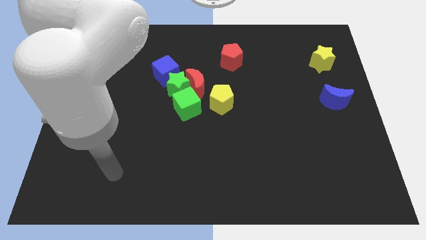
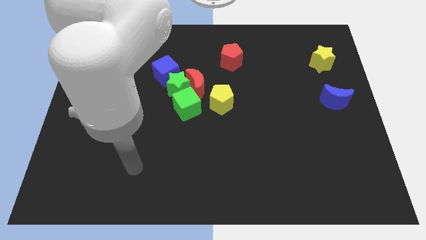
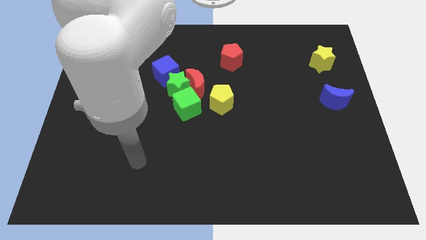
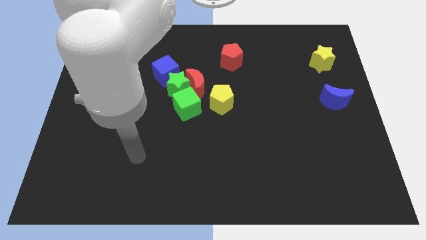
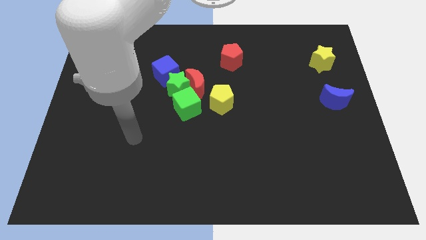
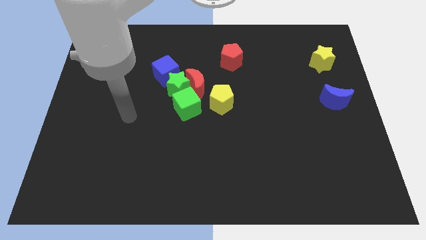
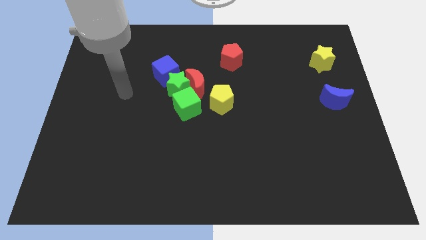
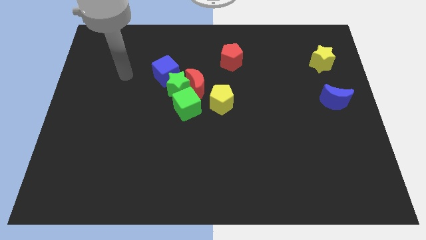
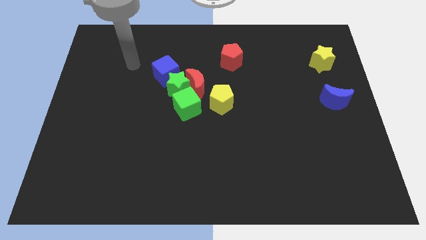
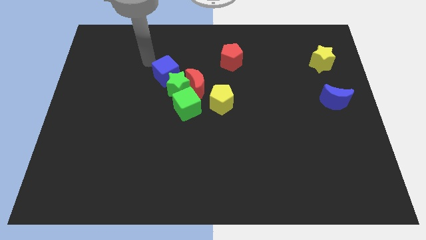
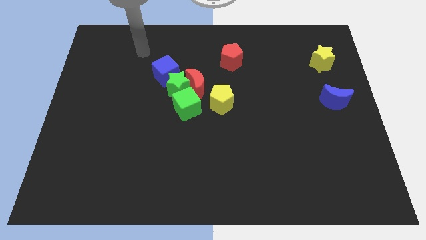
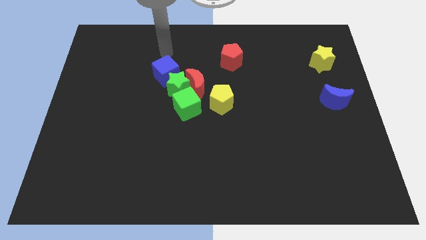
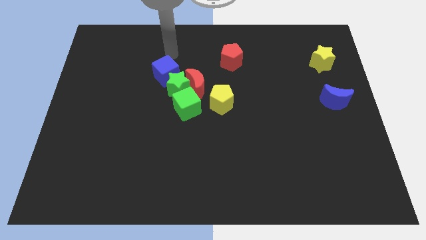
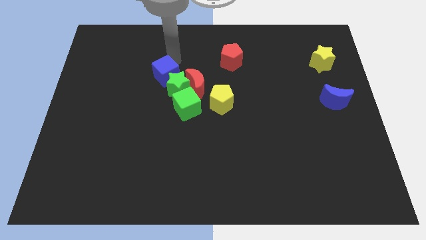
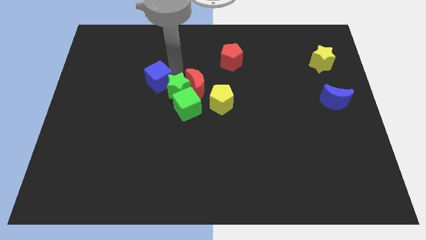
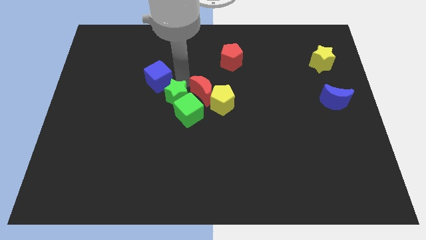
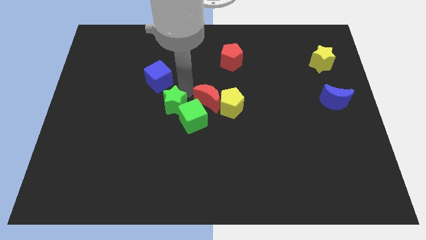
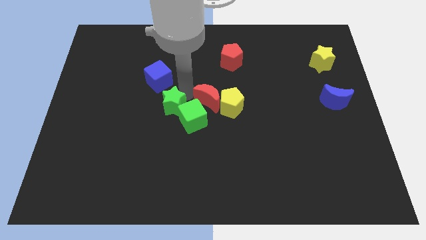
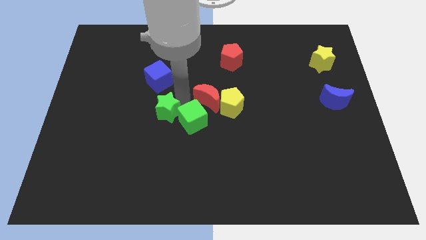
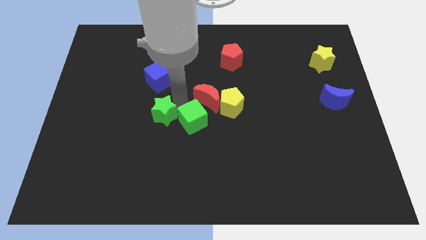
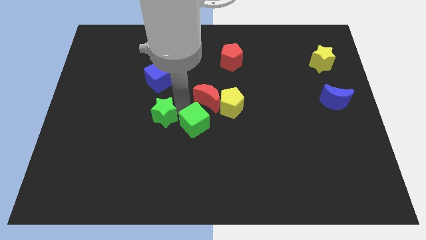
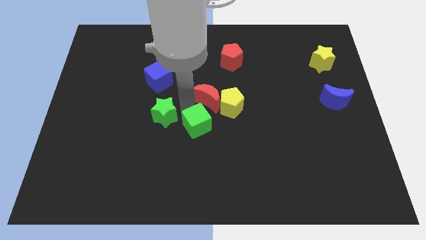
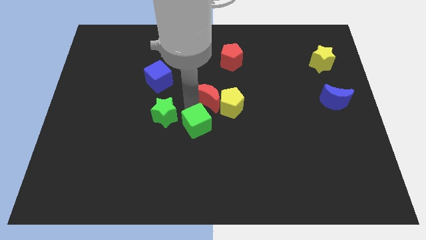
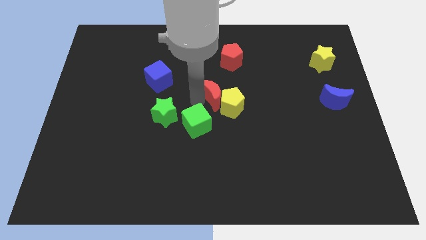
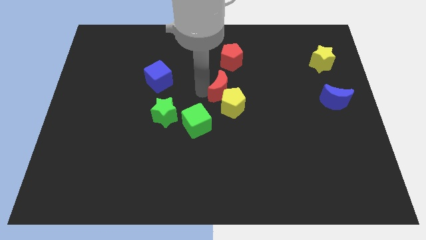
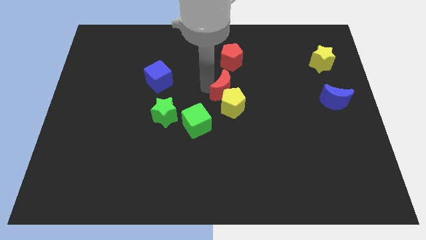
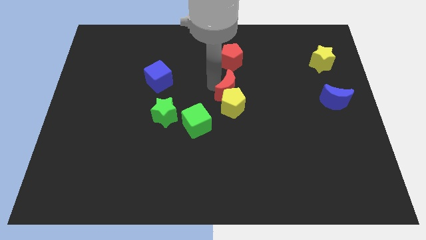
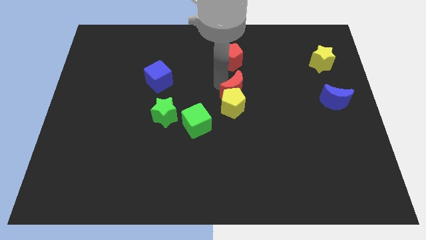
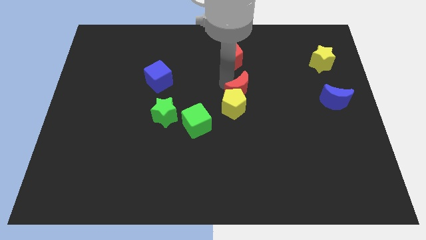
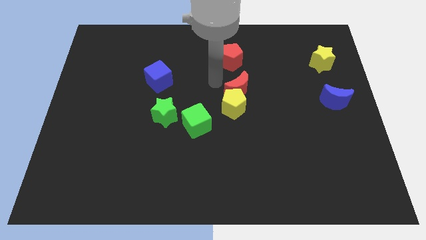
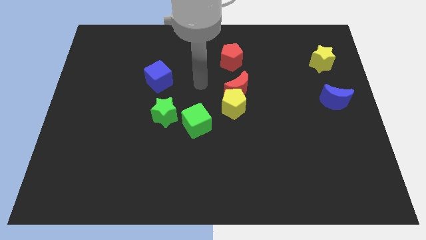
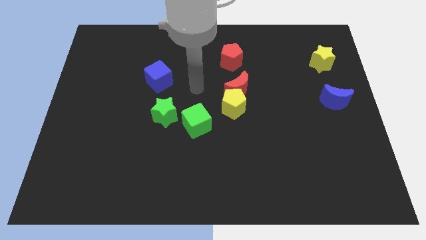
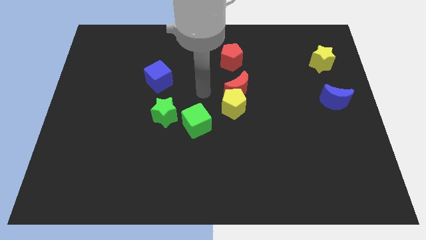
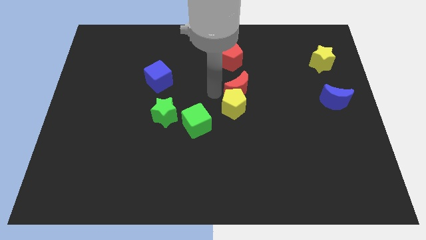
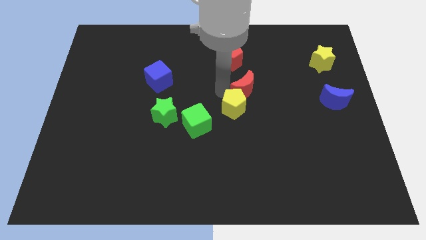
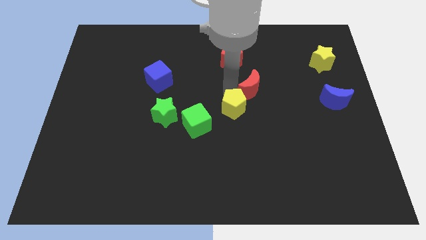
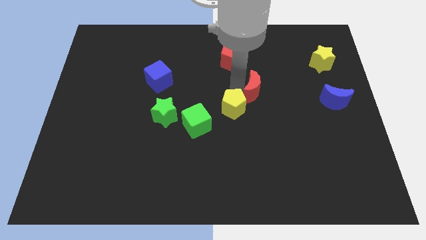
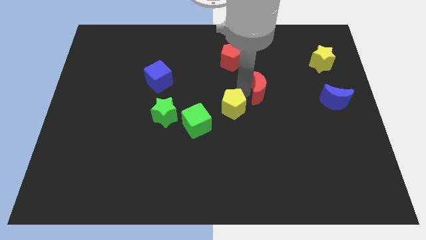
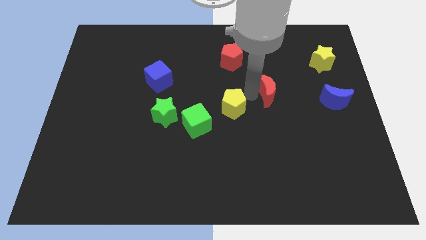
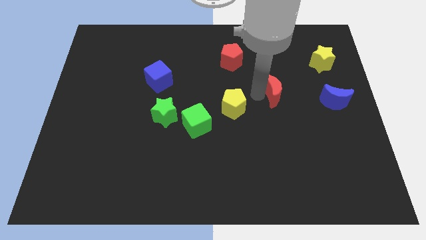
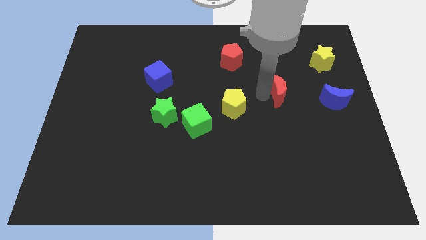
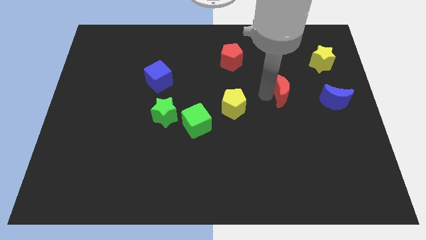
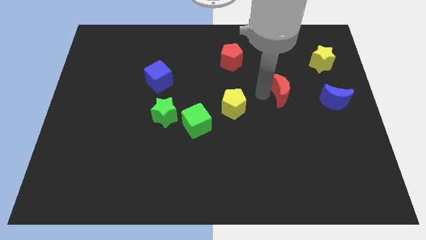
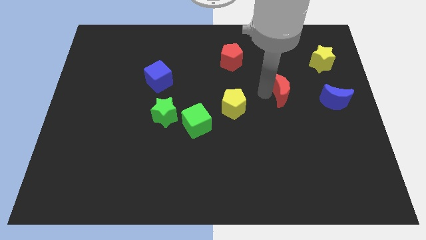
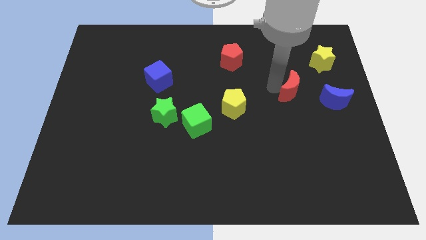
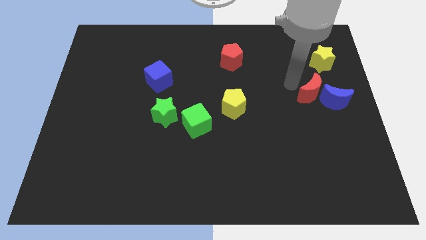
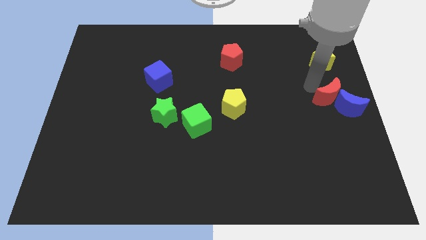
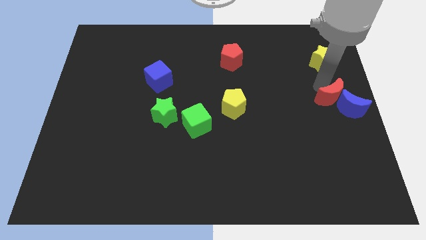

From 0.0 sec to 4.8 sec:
push the red moon next to the blue moon

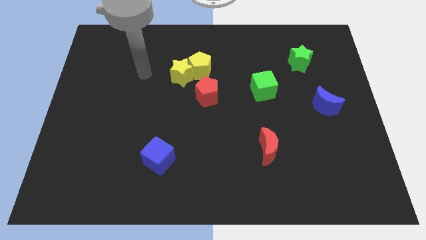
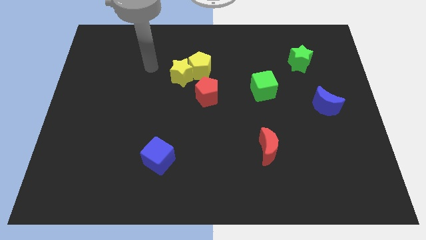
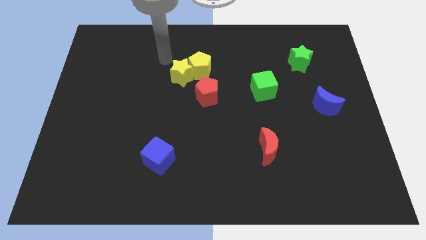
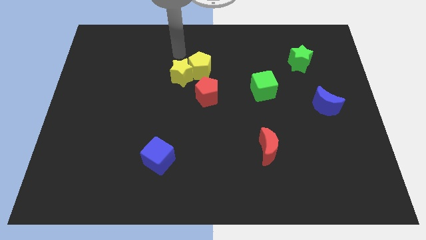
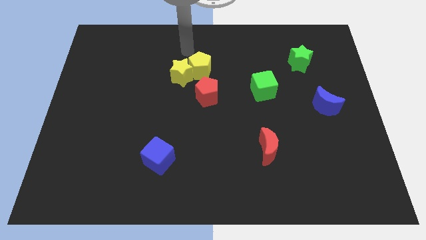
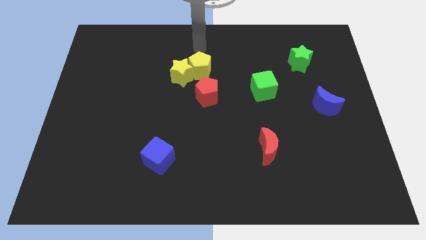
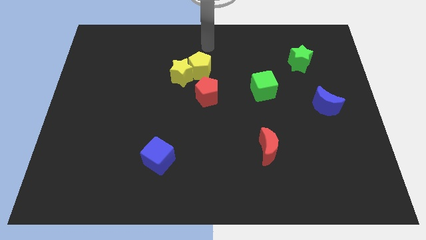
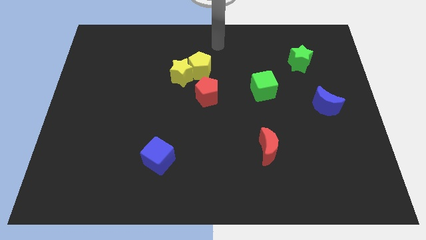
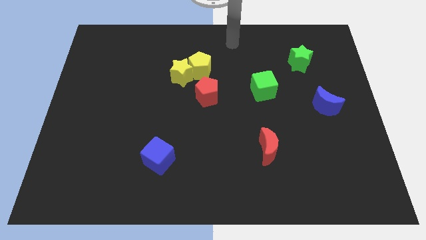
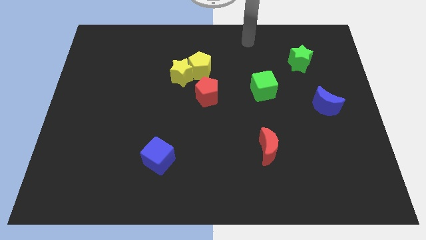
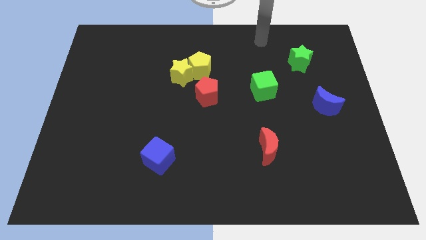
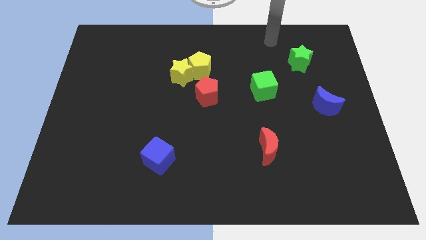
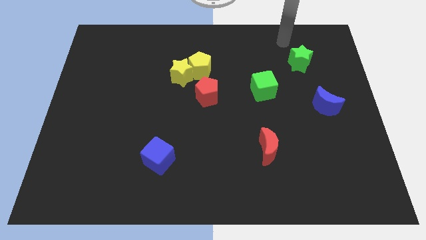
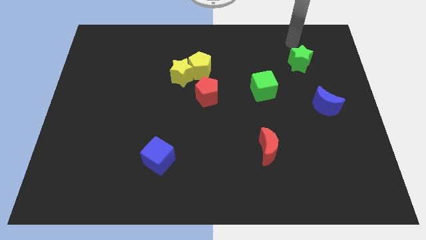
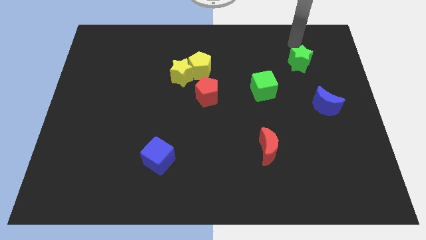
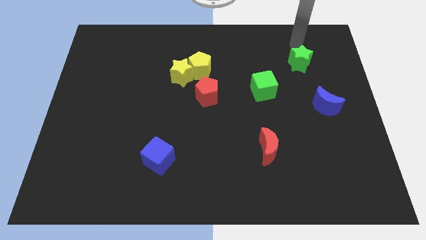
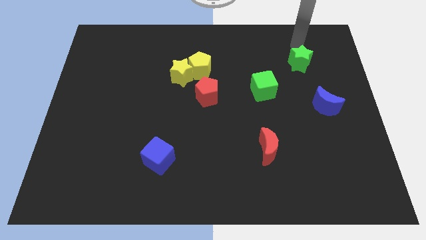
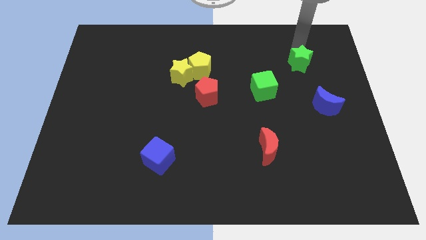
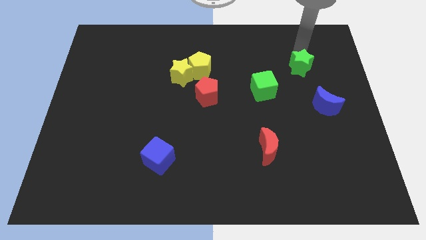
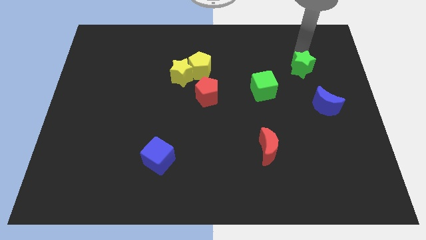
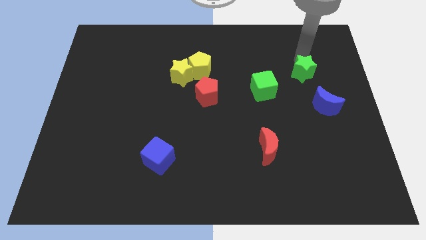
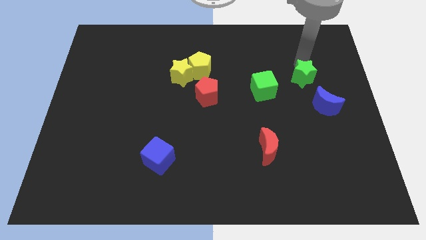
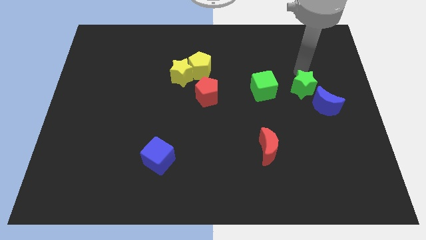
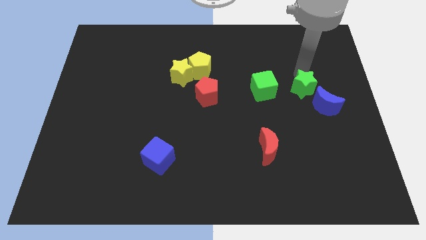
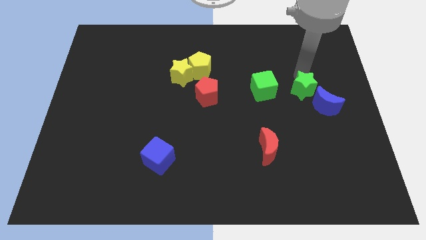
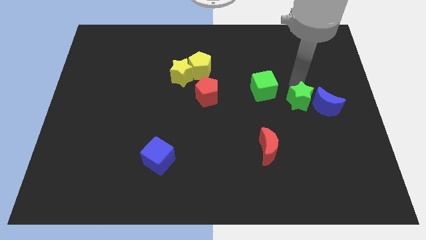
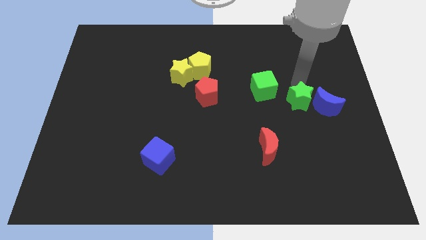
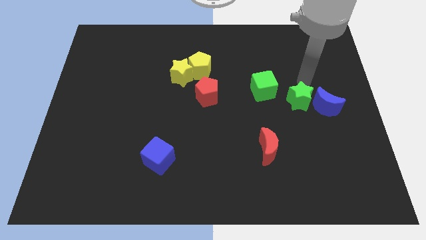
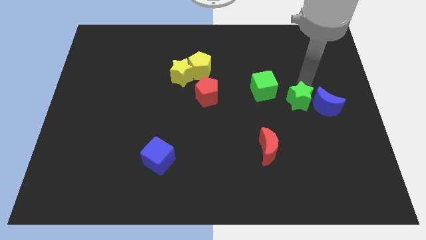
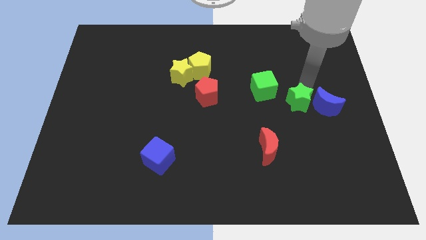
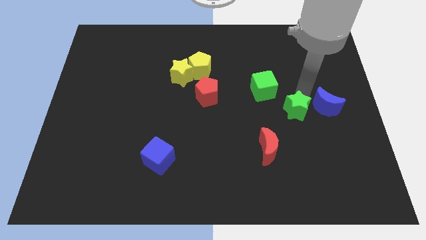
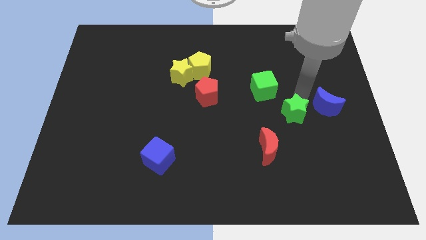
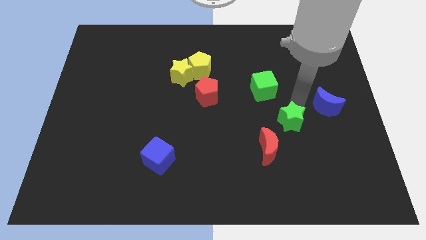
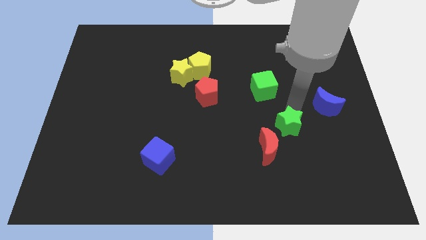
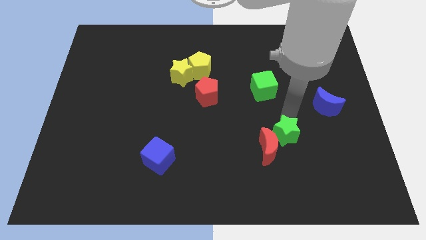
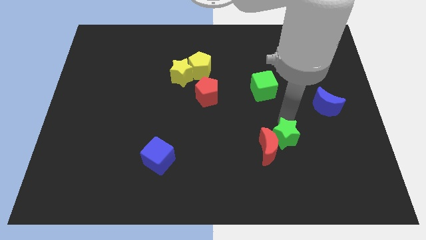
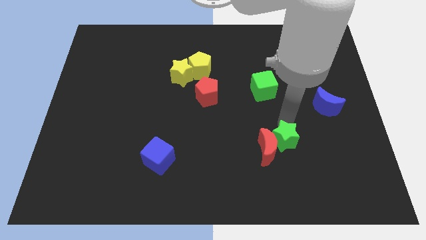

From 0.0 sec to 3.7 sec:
slide the green star close to the red moon
